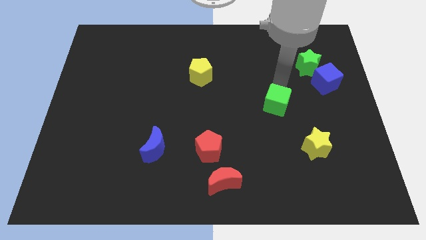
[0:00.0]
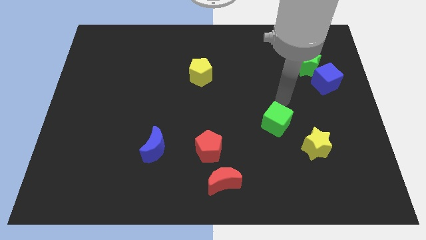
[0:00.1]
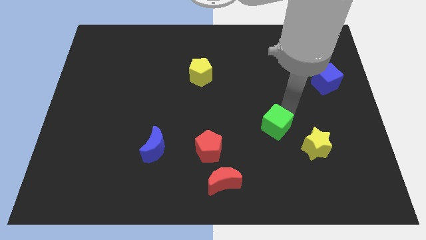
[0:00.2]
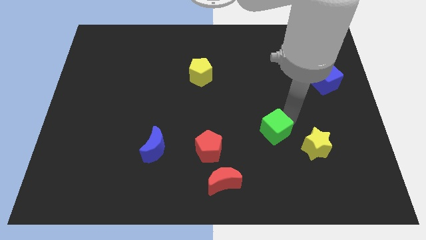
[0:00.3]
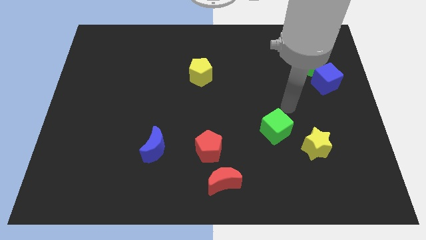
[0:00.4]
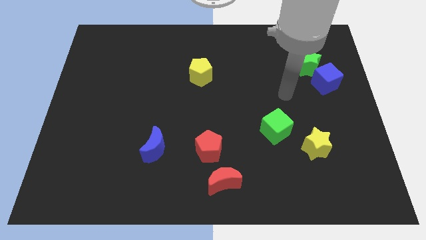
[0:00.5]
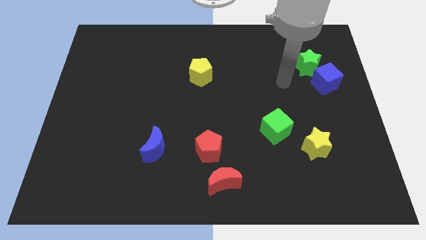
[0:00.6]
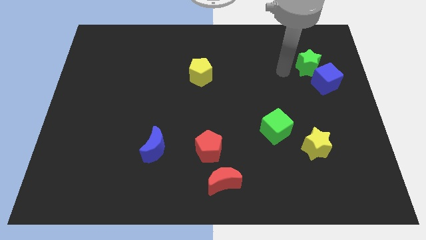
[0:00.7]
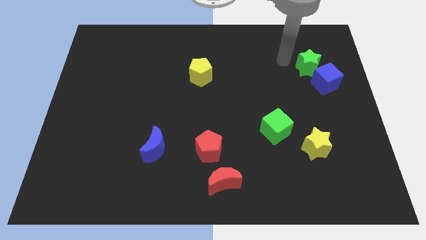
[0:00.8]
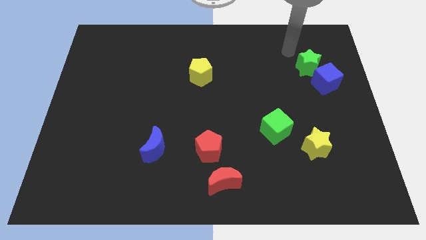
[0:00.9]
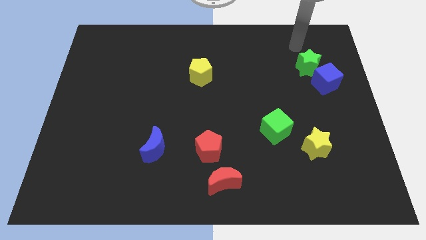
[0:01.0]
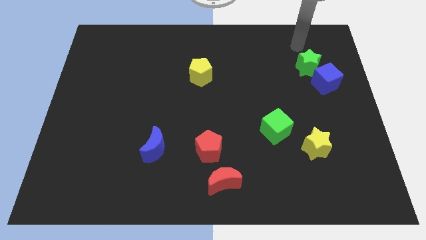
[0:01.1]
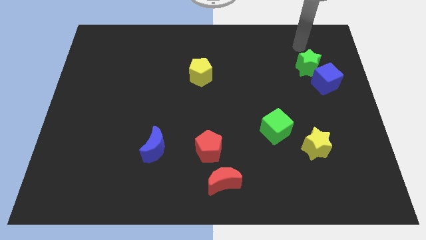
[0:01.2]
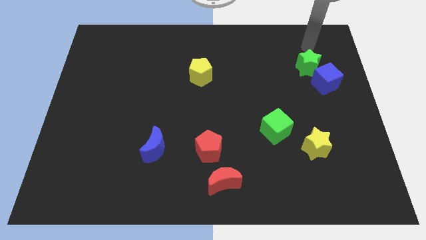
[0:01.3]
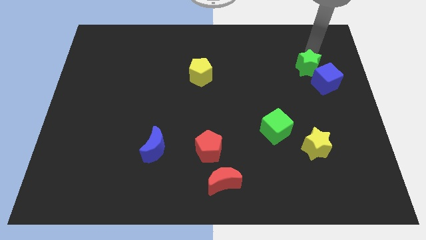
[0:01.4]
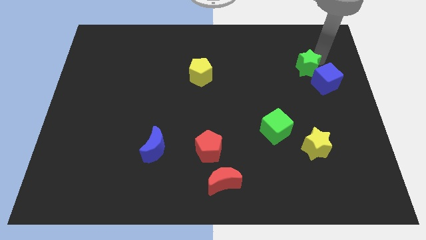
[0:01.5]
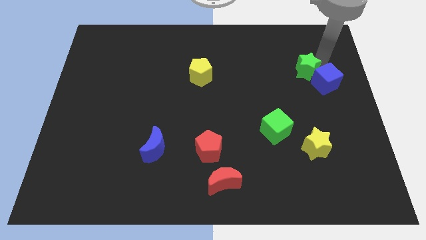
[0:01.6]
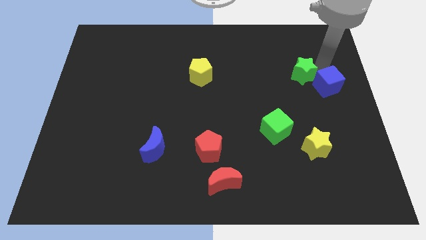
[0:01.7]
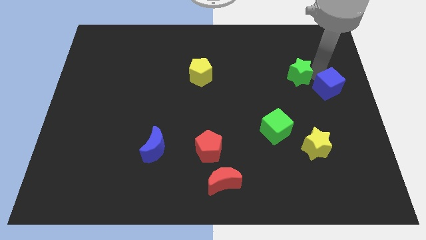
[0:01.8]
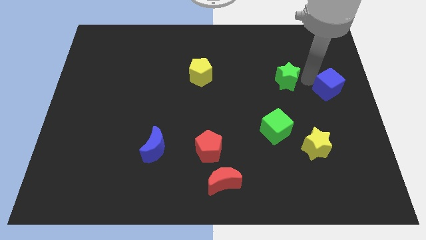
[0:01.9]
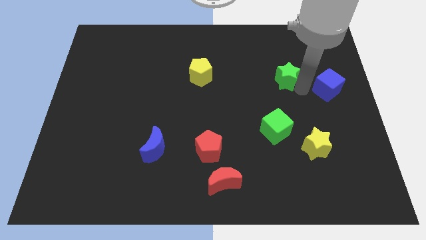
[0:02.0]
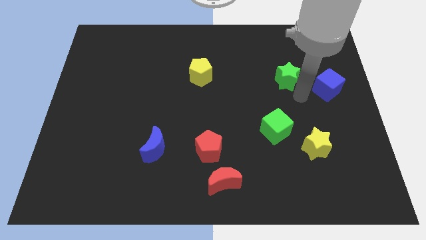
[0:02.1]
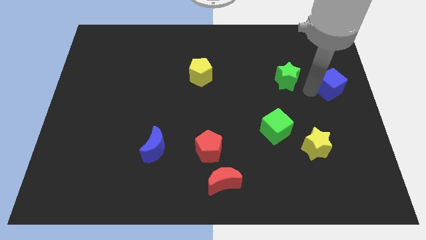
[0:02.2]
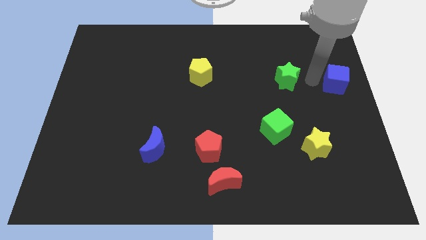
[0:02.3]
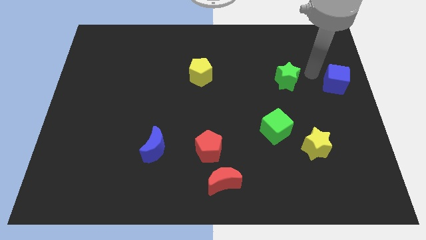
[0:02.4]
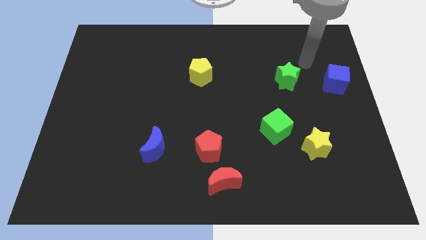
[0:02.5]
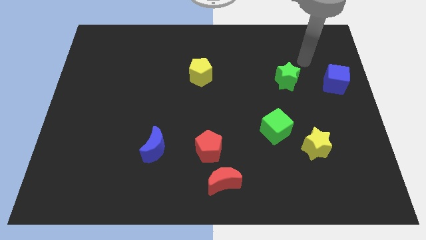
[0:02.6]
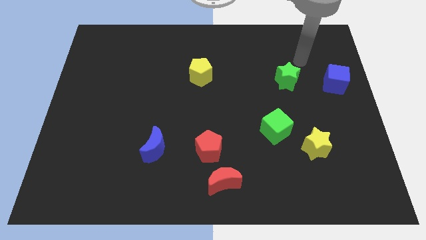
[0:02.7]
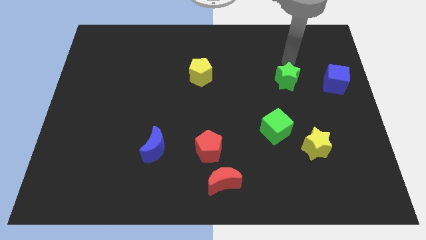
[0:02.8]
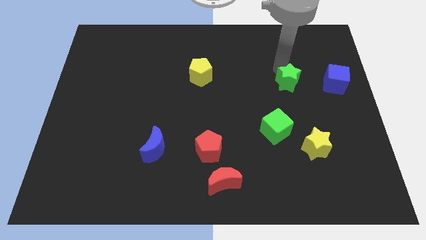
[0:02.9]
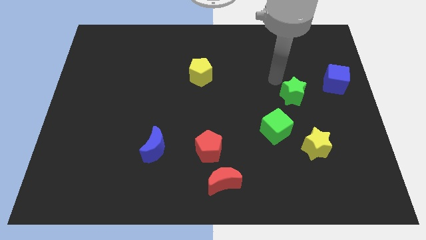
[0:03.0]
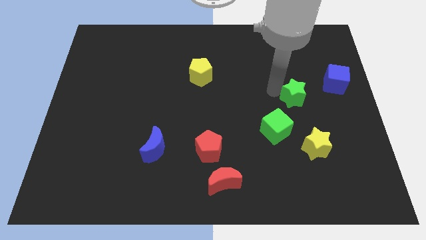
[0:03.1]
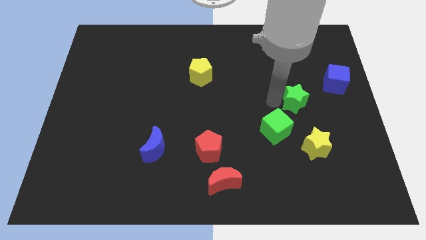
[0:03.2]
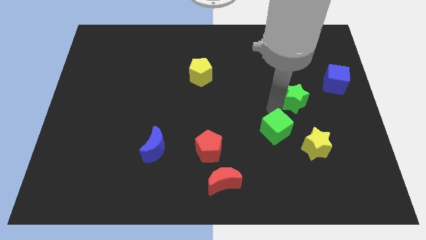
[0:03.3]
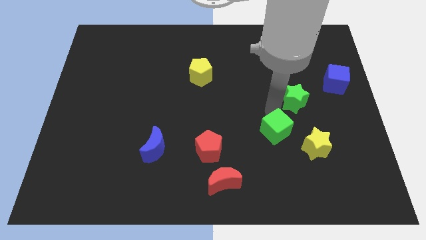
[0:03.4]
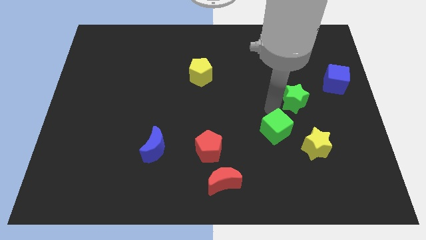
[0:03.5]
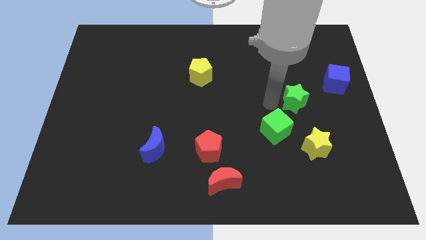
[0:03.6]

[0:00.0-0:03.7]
move the green blocks diagonal to the blue cube

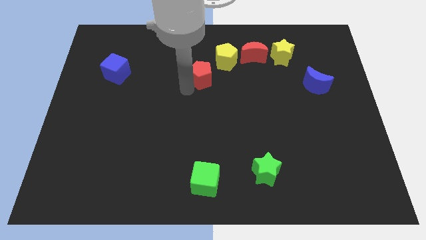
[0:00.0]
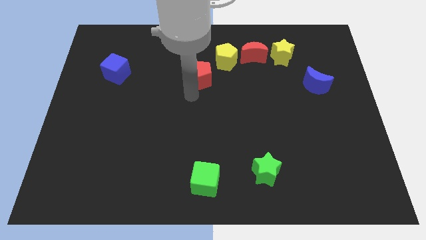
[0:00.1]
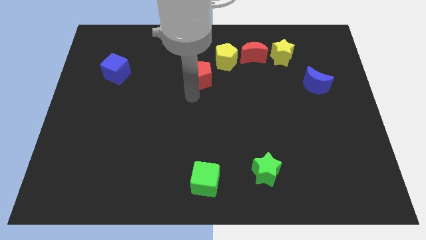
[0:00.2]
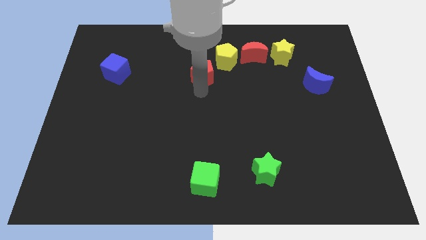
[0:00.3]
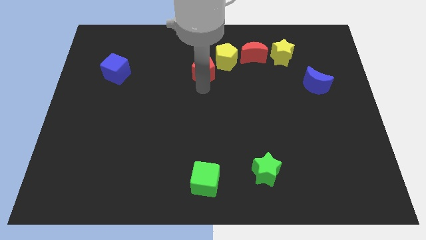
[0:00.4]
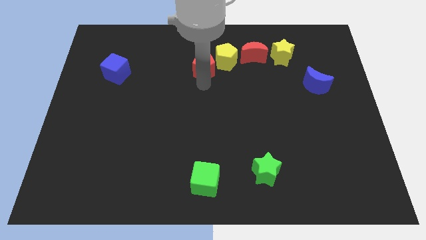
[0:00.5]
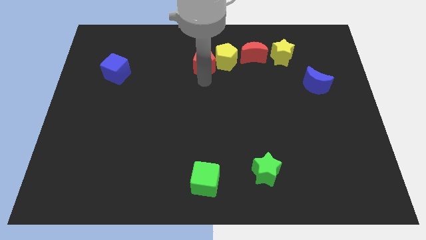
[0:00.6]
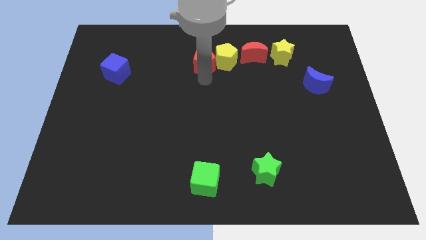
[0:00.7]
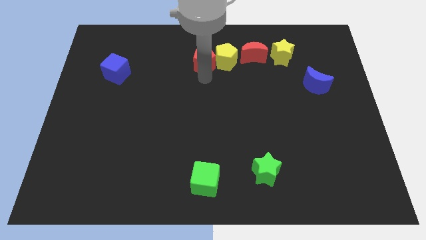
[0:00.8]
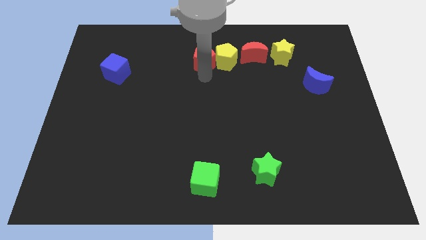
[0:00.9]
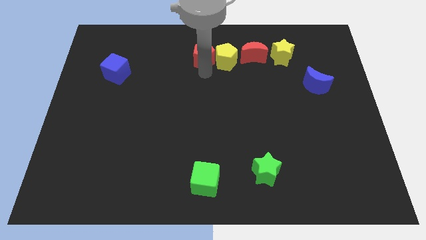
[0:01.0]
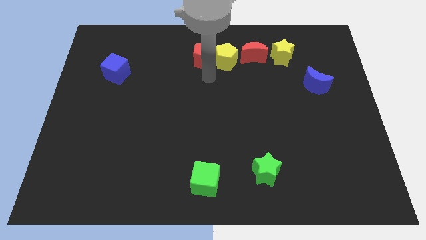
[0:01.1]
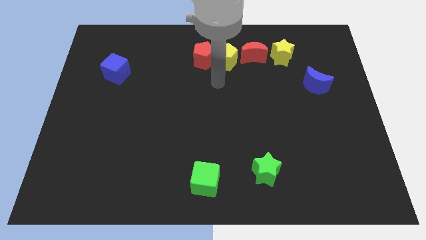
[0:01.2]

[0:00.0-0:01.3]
move the red pentagon close to the left side of the yellow pentagon

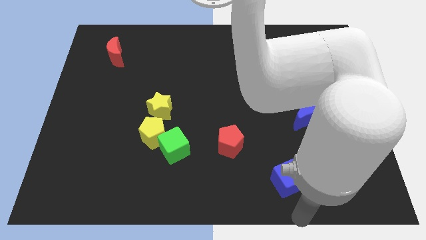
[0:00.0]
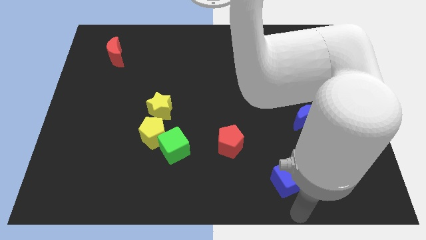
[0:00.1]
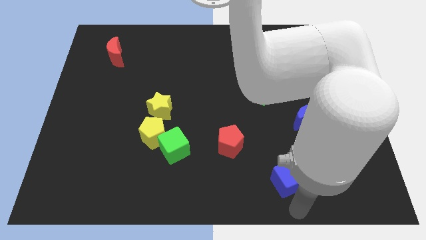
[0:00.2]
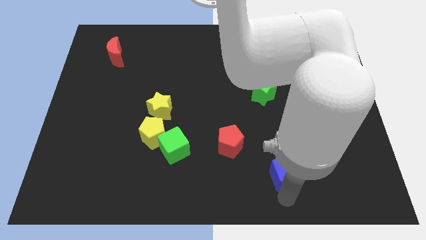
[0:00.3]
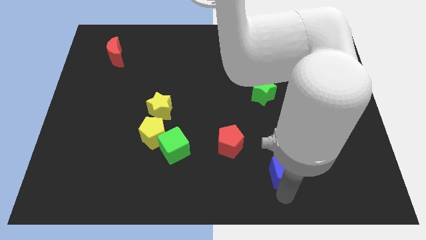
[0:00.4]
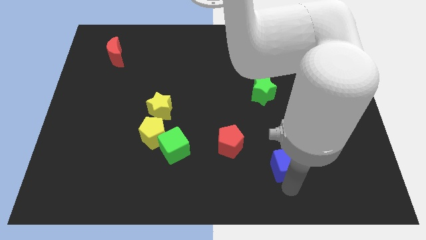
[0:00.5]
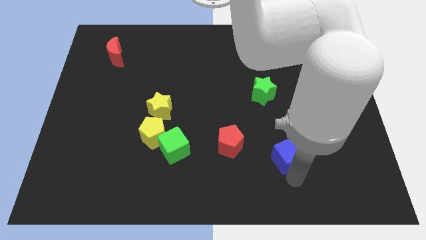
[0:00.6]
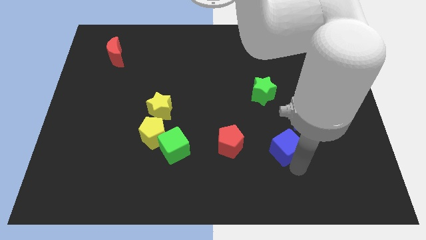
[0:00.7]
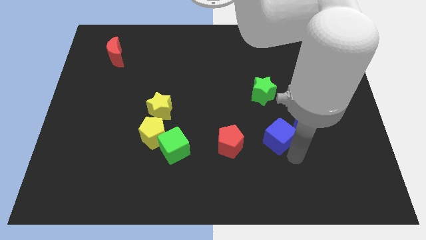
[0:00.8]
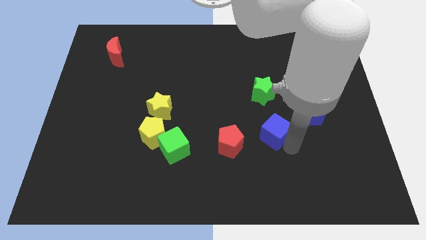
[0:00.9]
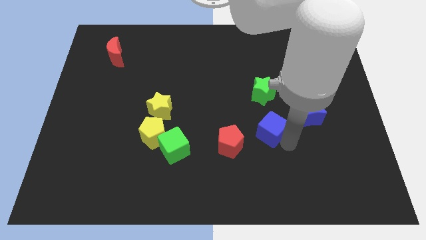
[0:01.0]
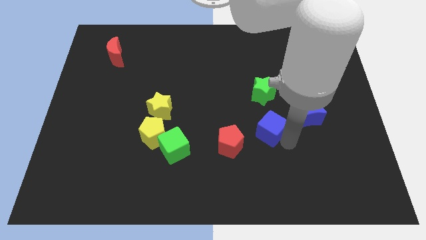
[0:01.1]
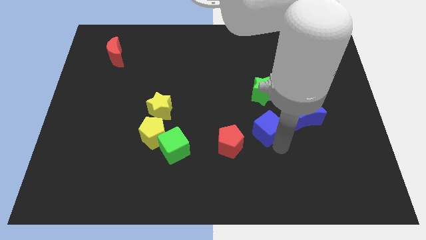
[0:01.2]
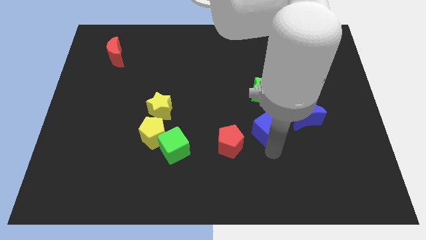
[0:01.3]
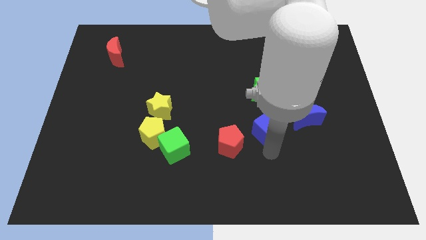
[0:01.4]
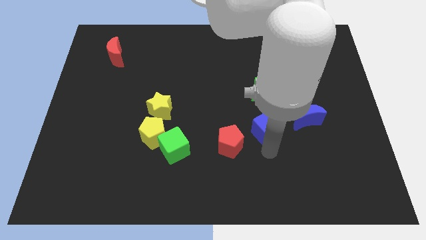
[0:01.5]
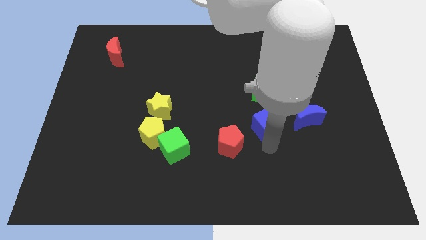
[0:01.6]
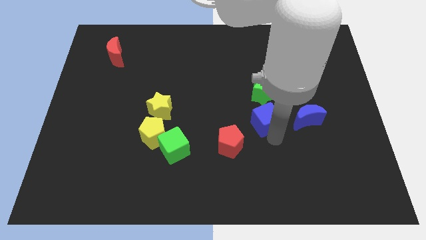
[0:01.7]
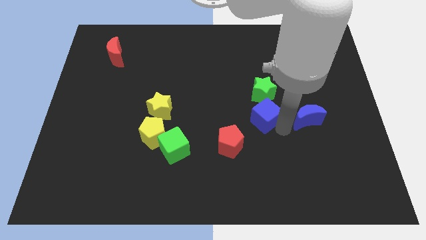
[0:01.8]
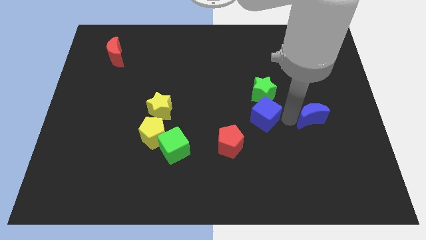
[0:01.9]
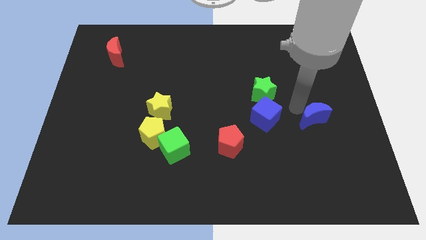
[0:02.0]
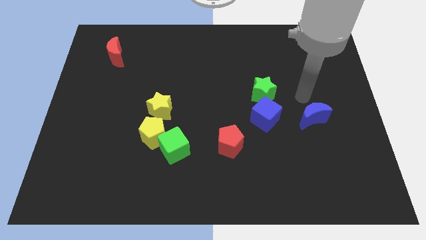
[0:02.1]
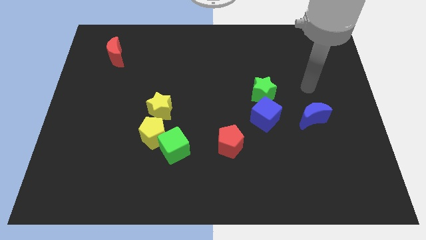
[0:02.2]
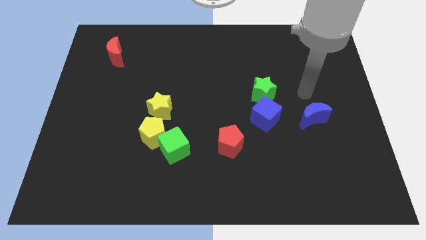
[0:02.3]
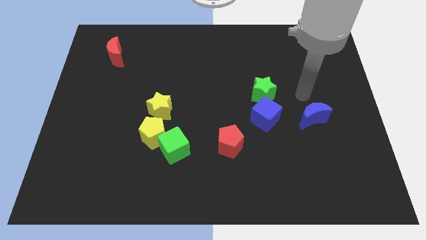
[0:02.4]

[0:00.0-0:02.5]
place the blue cube down to the green star

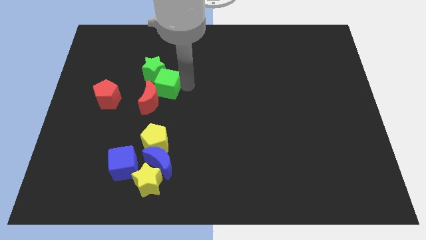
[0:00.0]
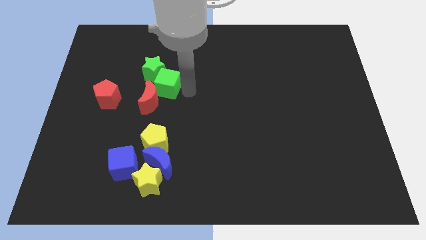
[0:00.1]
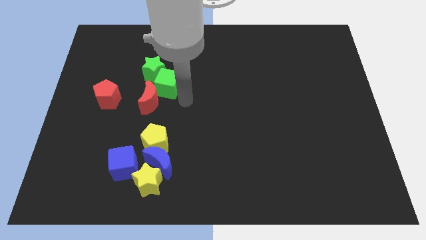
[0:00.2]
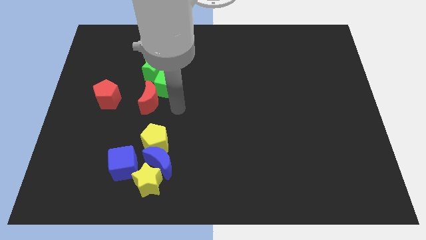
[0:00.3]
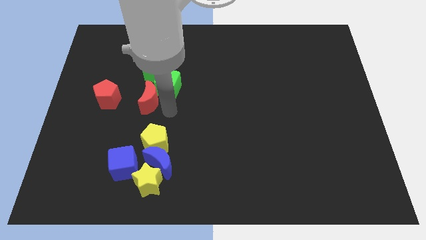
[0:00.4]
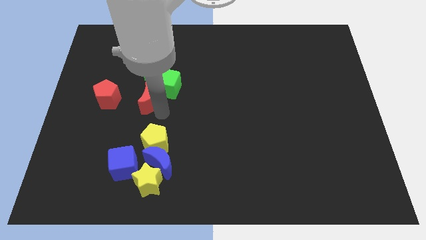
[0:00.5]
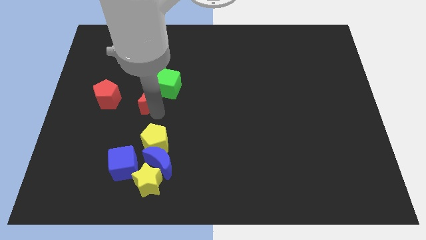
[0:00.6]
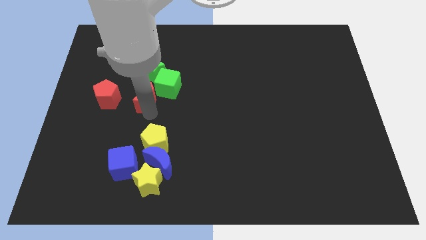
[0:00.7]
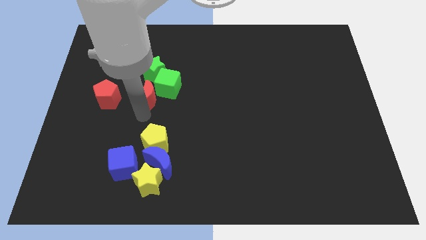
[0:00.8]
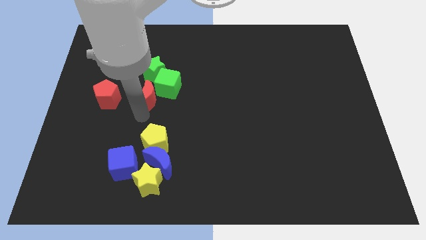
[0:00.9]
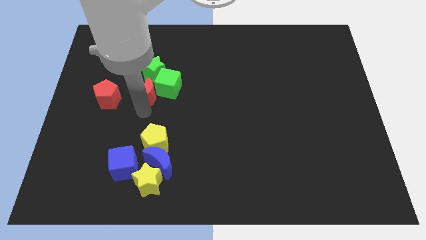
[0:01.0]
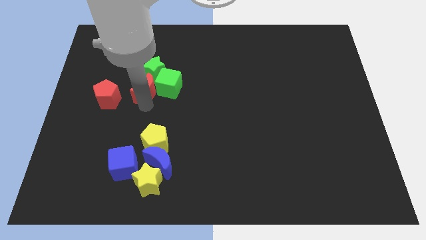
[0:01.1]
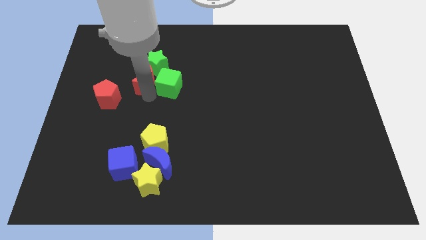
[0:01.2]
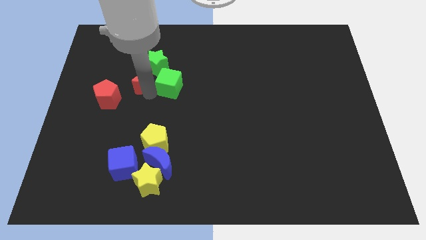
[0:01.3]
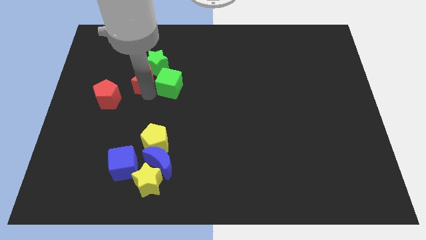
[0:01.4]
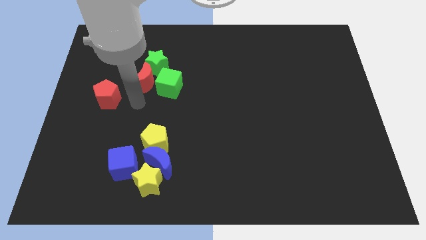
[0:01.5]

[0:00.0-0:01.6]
push the red crescent into the green star
